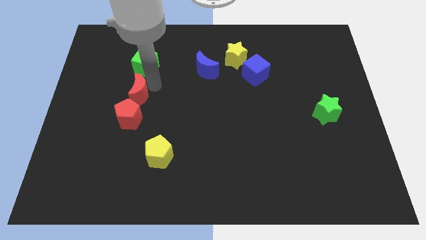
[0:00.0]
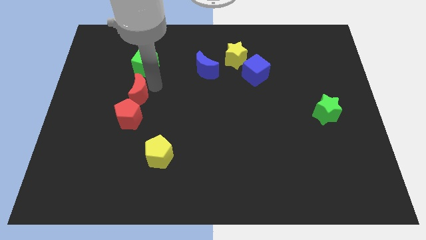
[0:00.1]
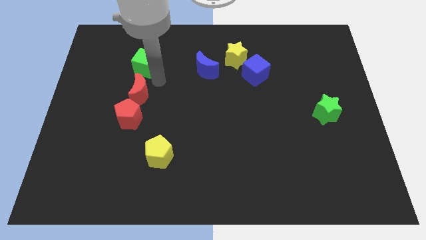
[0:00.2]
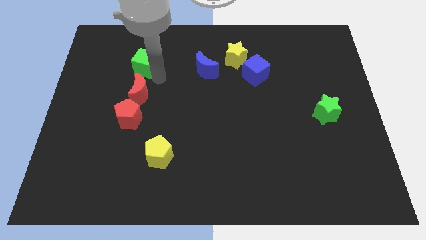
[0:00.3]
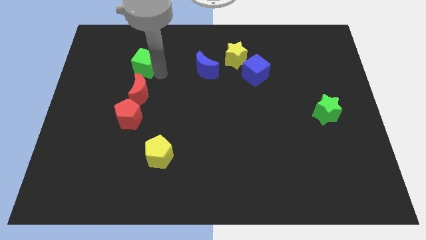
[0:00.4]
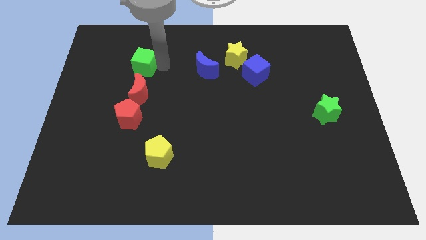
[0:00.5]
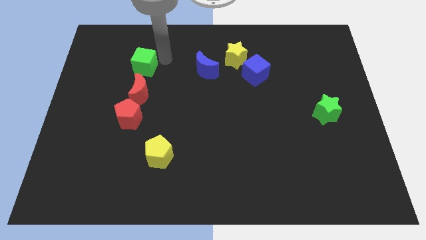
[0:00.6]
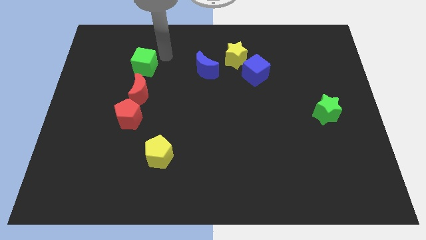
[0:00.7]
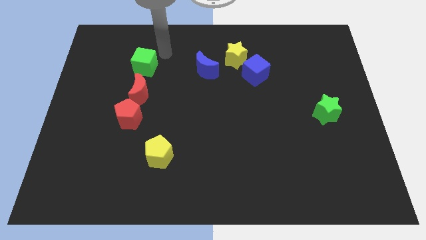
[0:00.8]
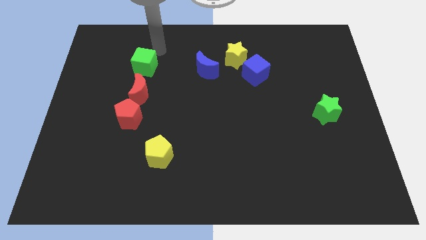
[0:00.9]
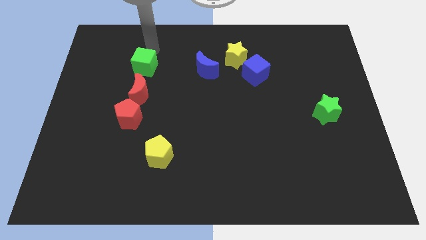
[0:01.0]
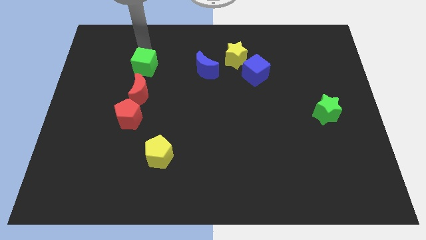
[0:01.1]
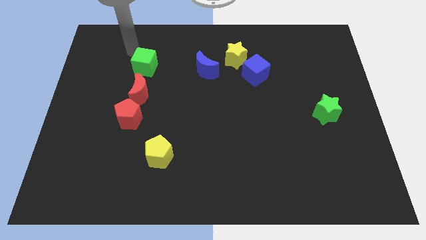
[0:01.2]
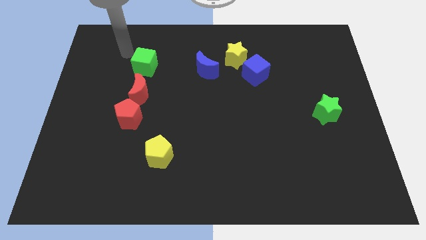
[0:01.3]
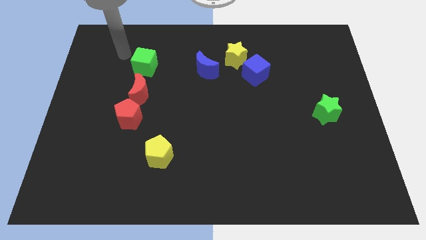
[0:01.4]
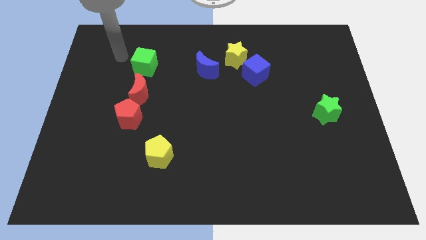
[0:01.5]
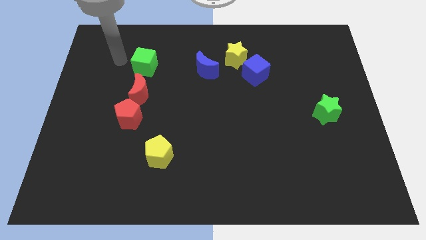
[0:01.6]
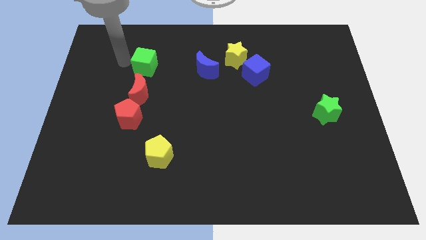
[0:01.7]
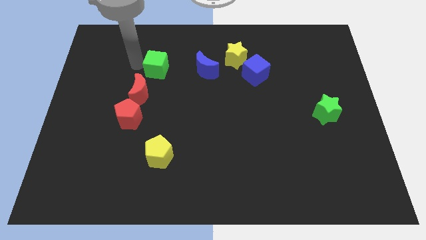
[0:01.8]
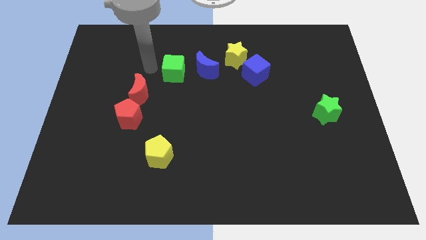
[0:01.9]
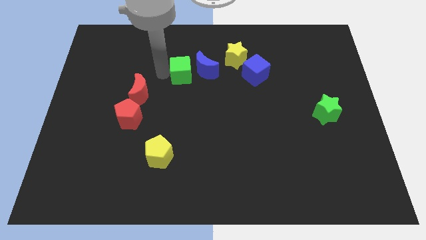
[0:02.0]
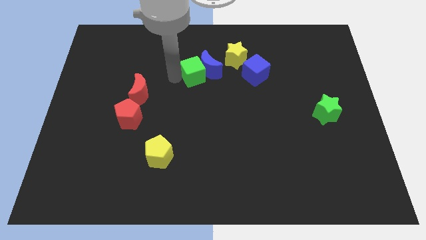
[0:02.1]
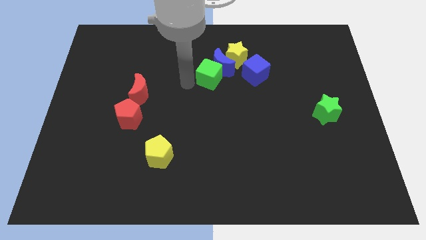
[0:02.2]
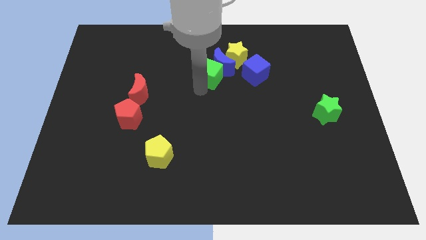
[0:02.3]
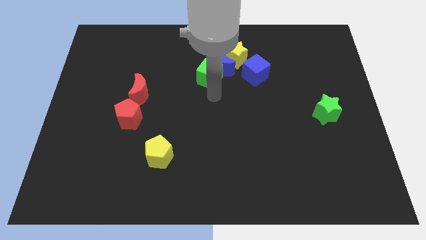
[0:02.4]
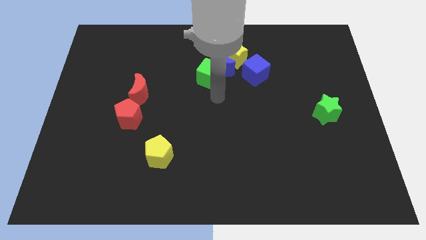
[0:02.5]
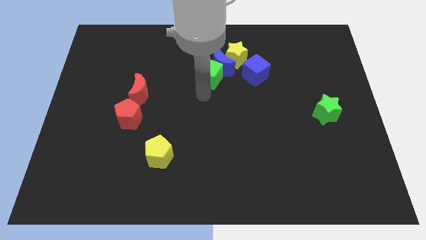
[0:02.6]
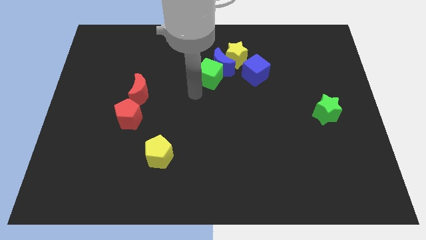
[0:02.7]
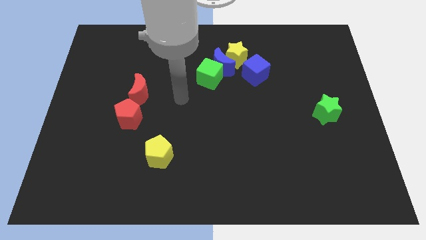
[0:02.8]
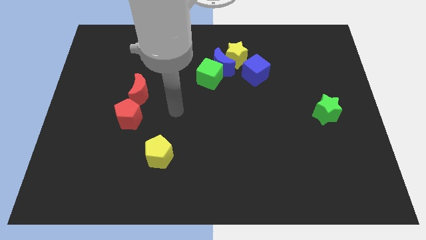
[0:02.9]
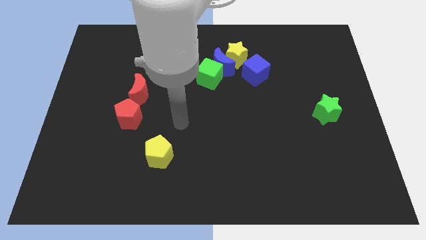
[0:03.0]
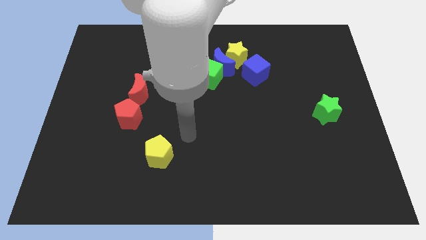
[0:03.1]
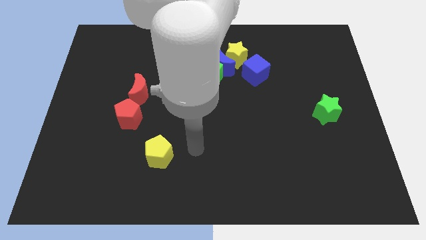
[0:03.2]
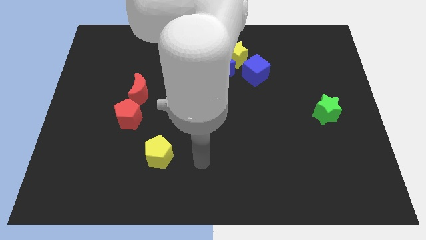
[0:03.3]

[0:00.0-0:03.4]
push green cube to the bottom of the blue moon

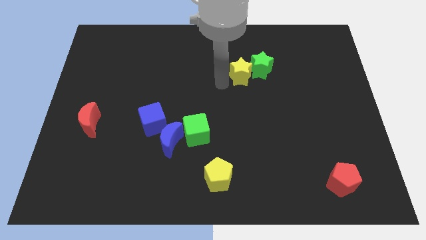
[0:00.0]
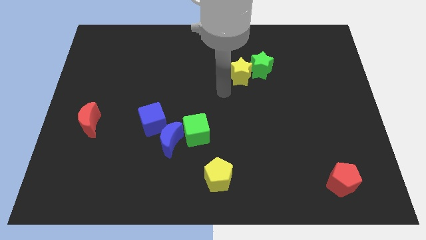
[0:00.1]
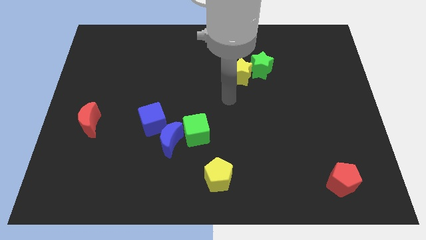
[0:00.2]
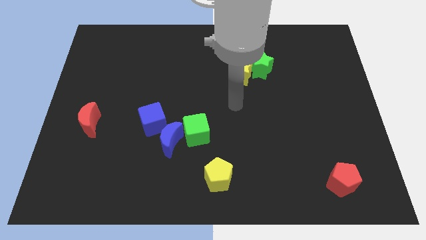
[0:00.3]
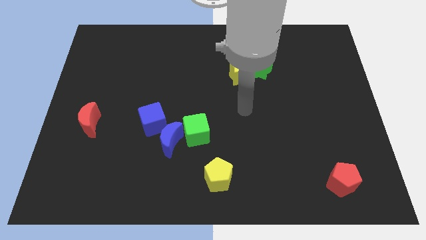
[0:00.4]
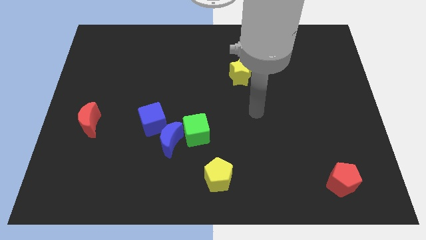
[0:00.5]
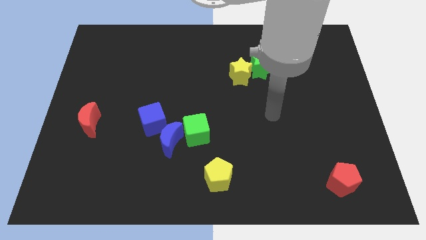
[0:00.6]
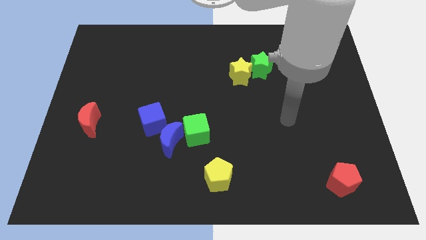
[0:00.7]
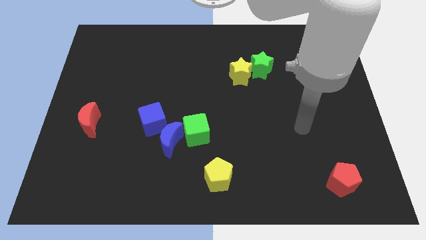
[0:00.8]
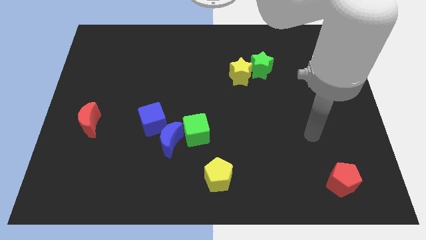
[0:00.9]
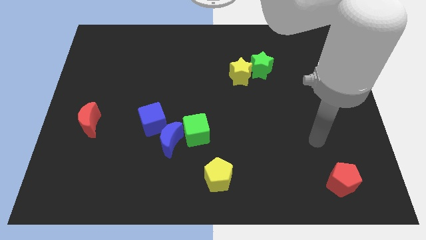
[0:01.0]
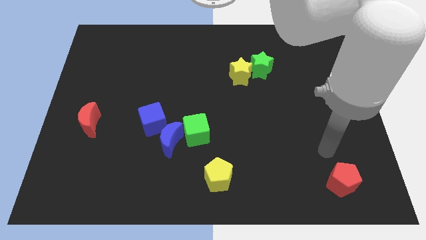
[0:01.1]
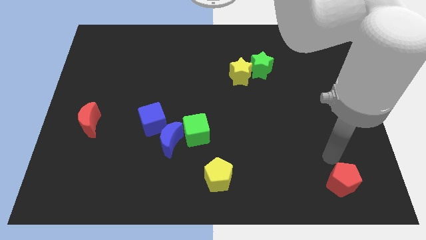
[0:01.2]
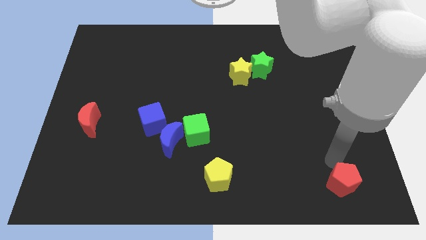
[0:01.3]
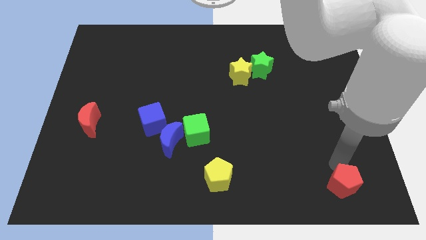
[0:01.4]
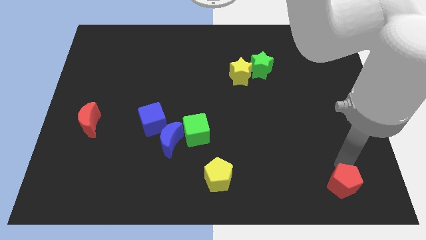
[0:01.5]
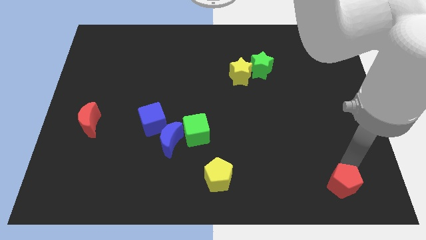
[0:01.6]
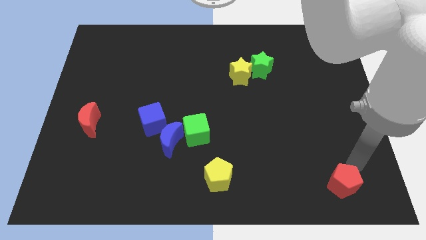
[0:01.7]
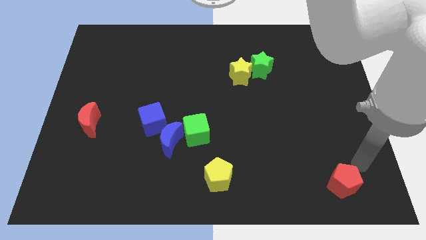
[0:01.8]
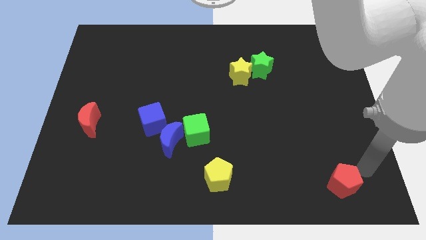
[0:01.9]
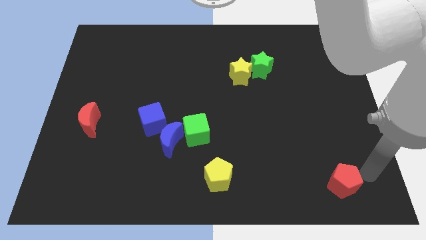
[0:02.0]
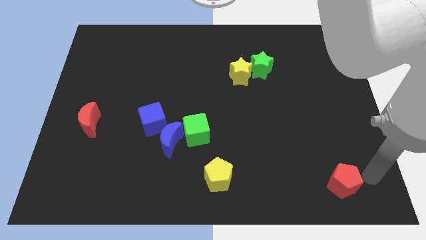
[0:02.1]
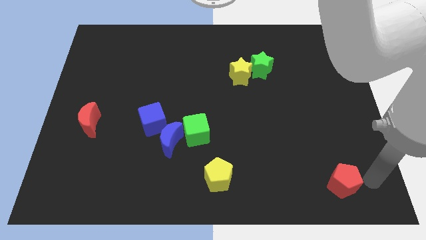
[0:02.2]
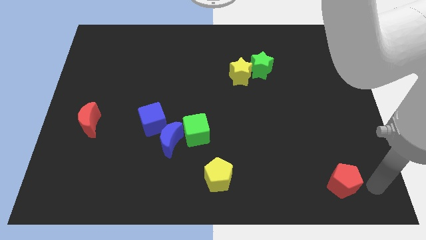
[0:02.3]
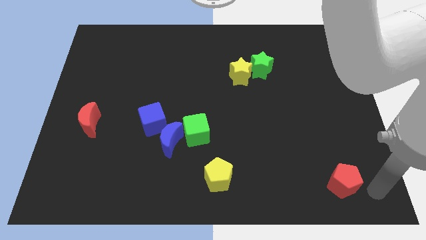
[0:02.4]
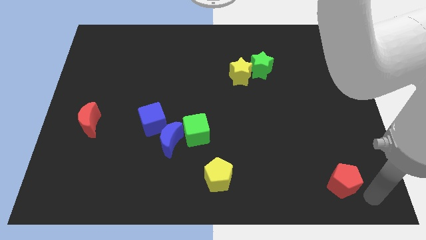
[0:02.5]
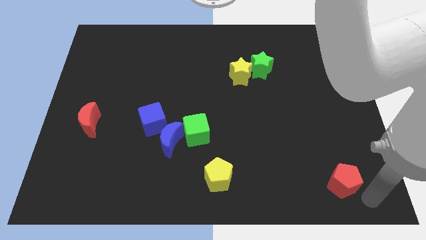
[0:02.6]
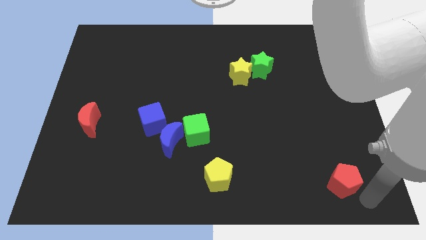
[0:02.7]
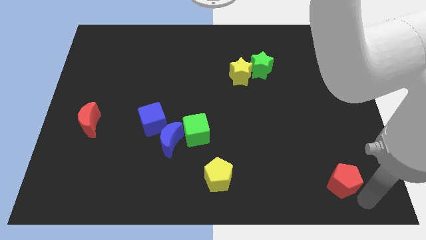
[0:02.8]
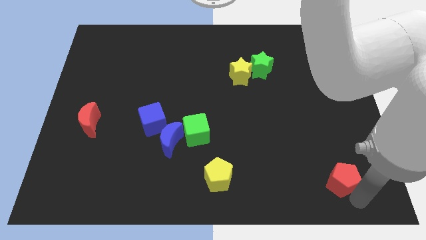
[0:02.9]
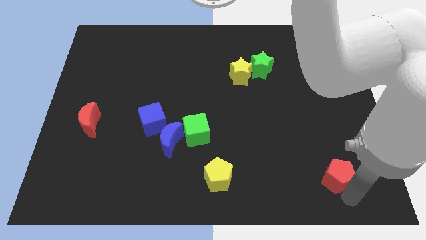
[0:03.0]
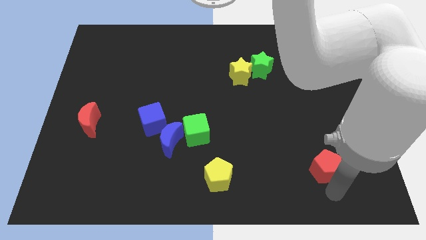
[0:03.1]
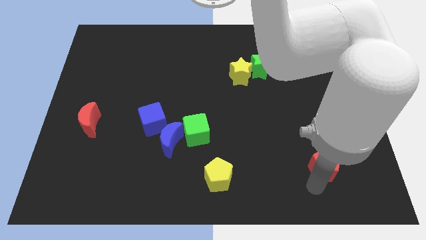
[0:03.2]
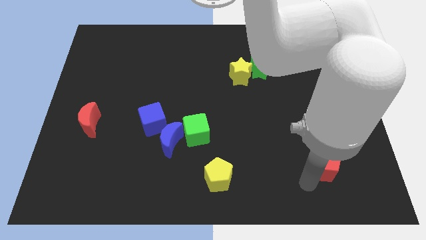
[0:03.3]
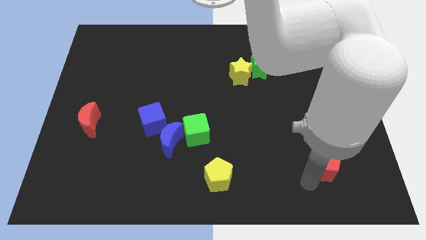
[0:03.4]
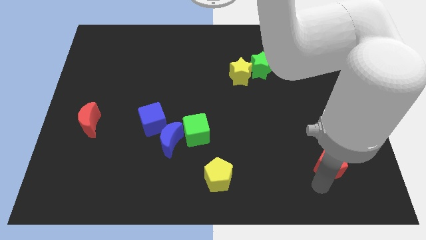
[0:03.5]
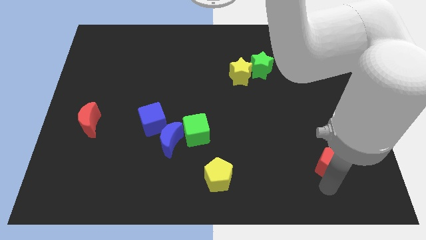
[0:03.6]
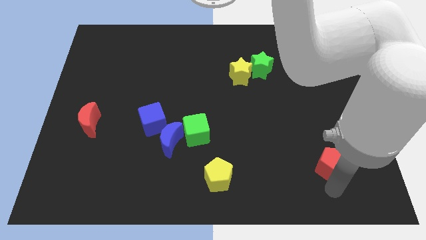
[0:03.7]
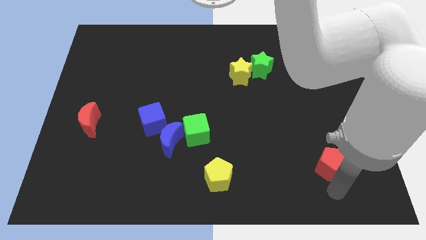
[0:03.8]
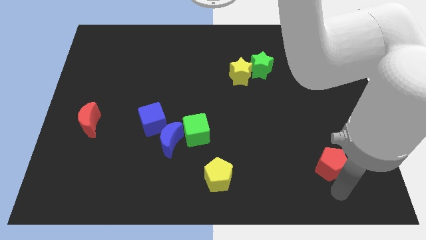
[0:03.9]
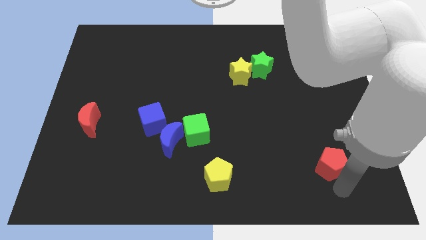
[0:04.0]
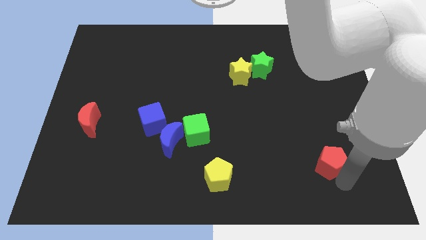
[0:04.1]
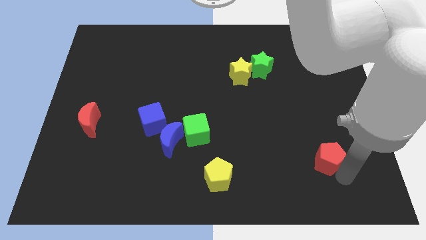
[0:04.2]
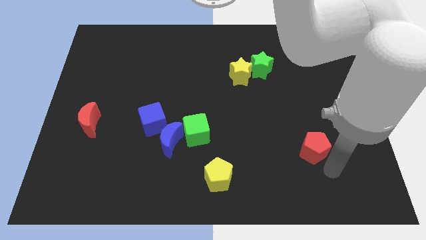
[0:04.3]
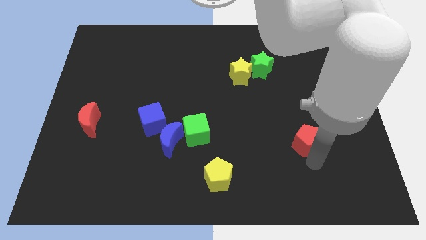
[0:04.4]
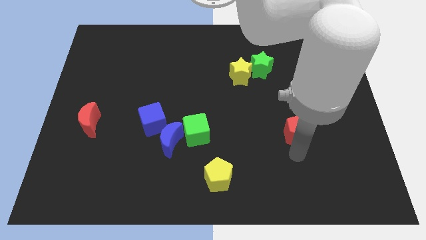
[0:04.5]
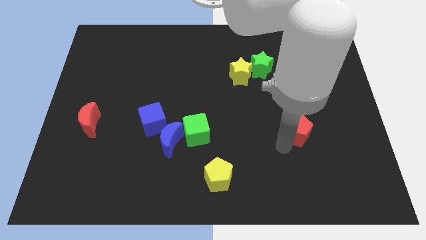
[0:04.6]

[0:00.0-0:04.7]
push the red pentagon towards the top side of the board

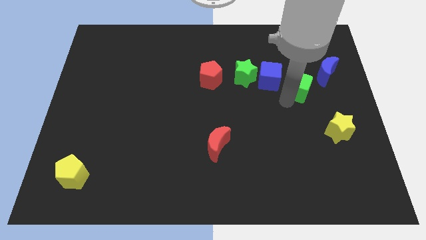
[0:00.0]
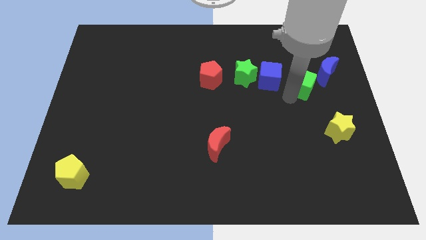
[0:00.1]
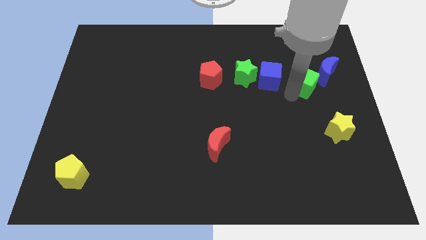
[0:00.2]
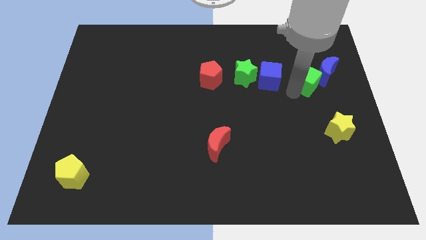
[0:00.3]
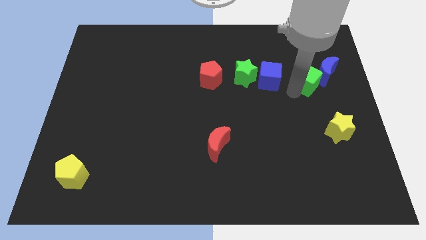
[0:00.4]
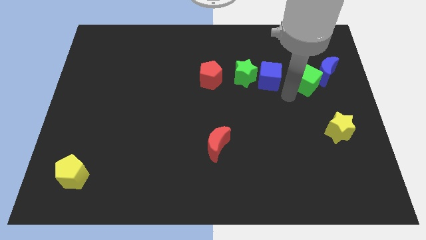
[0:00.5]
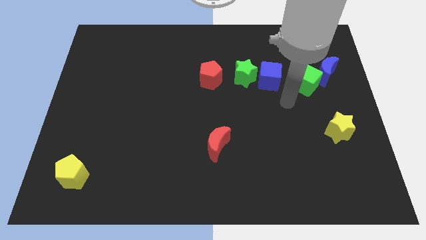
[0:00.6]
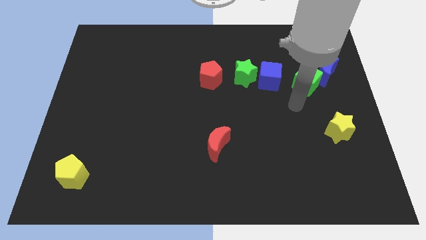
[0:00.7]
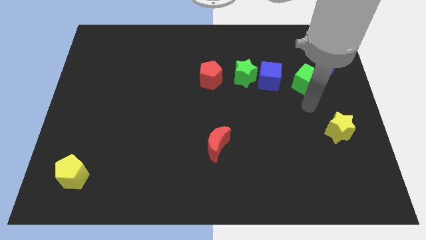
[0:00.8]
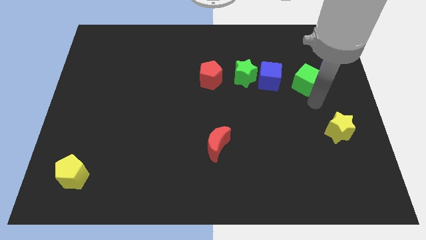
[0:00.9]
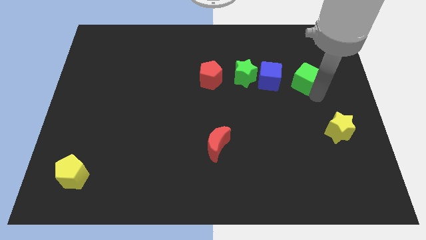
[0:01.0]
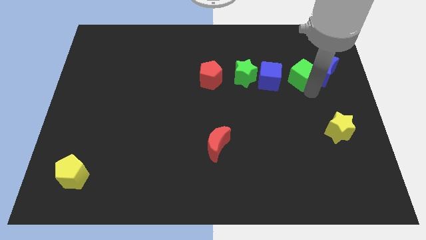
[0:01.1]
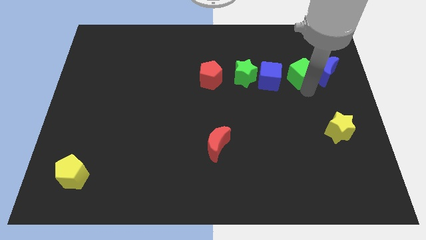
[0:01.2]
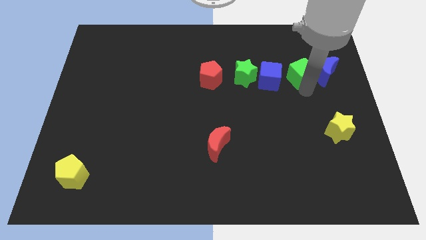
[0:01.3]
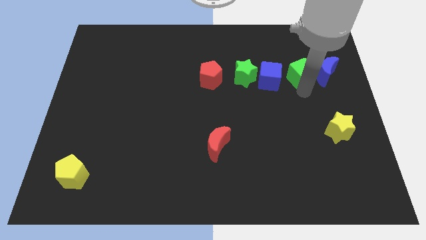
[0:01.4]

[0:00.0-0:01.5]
put the green cube next to the blue cube
